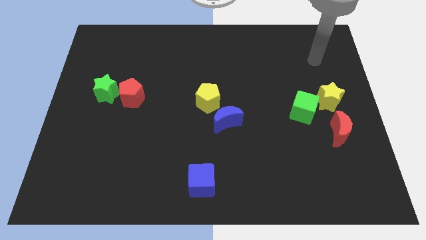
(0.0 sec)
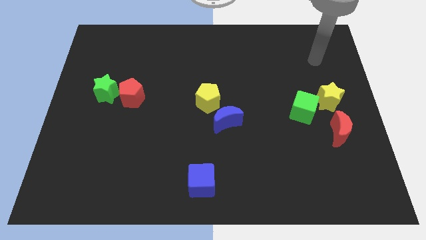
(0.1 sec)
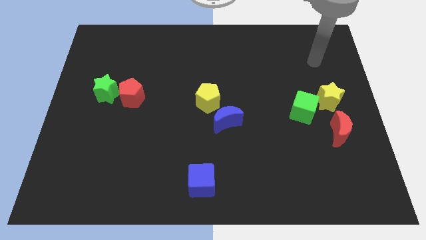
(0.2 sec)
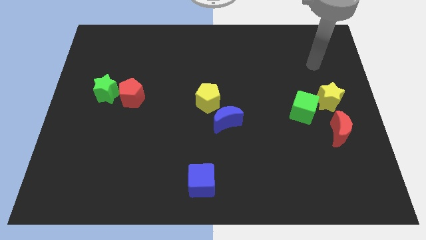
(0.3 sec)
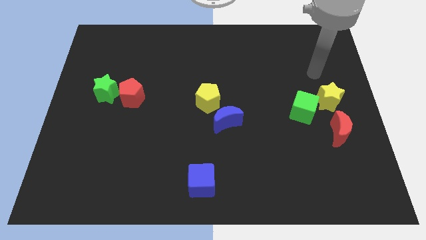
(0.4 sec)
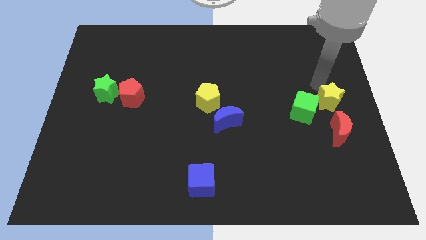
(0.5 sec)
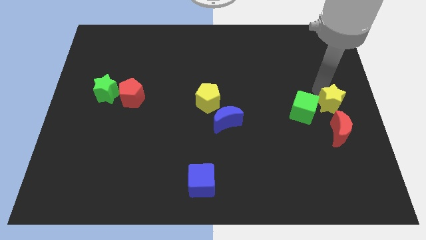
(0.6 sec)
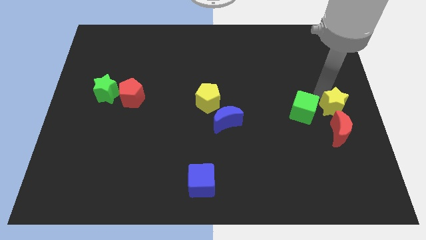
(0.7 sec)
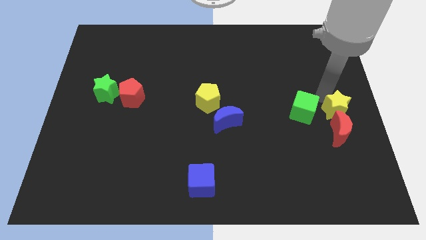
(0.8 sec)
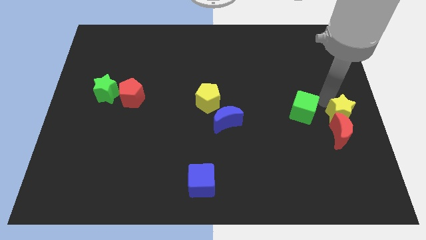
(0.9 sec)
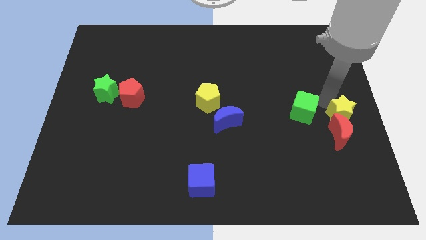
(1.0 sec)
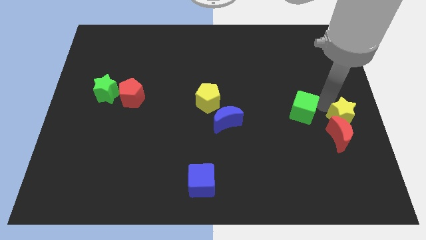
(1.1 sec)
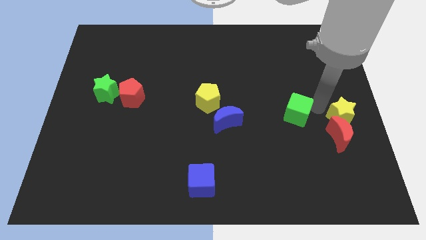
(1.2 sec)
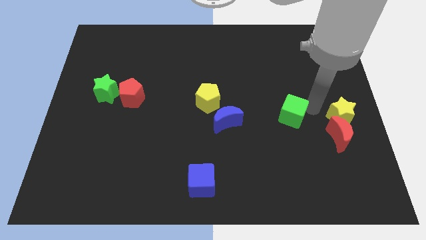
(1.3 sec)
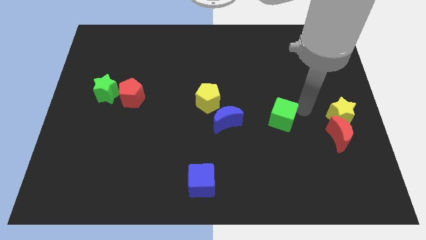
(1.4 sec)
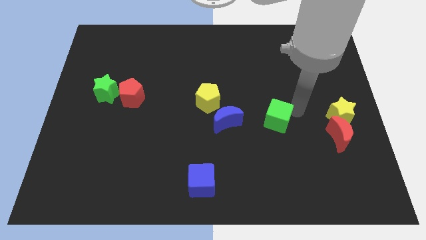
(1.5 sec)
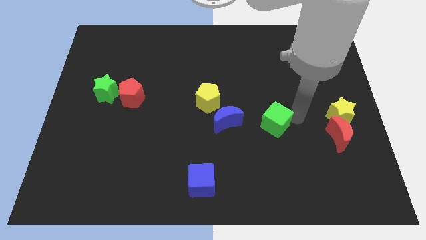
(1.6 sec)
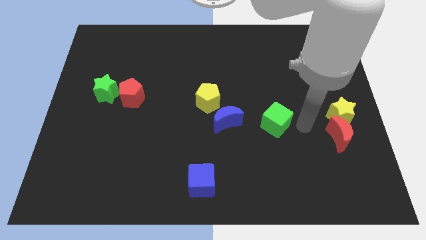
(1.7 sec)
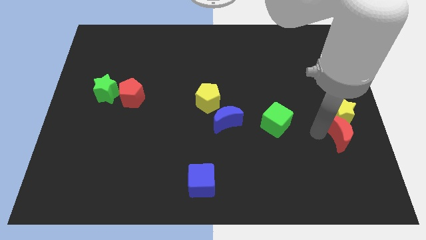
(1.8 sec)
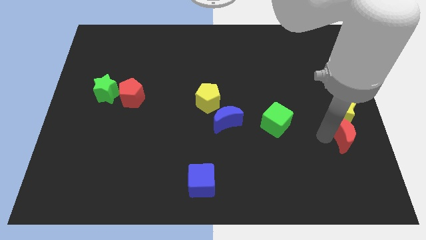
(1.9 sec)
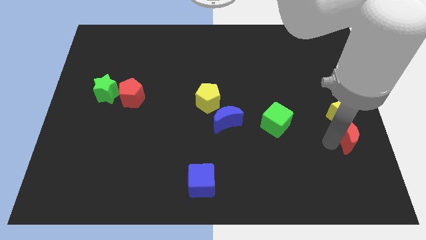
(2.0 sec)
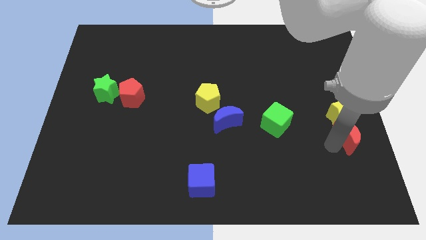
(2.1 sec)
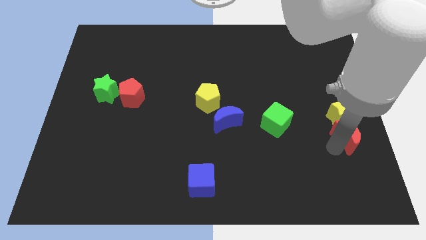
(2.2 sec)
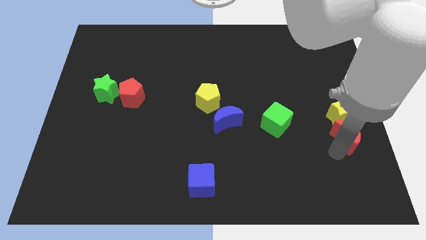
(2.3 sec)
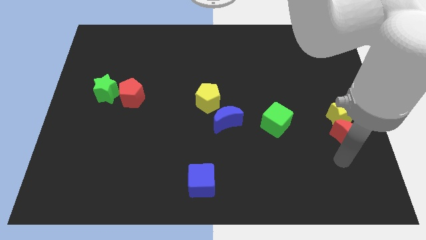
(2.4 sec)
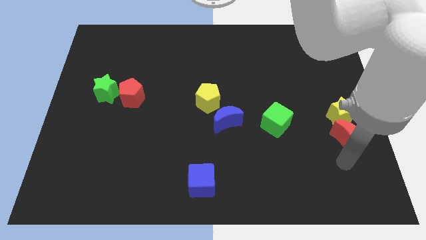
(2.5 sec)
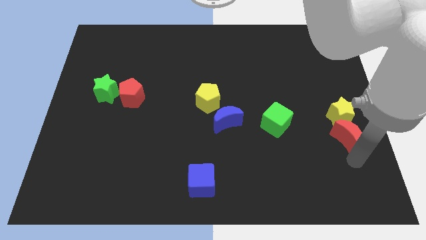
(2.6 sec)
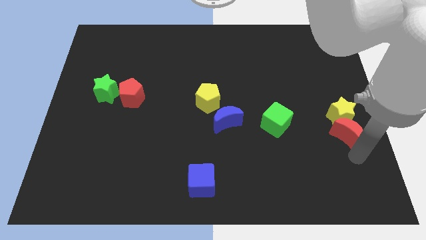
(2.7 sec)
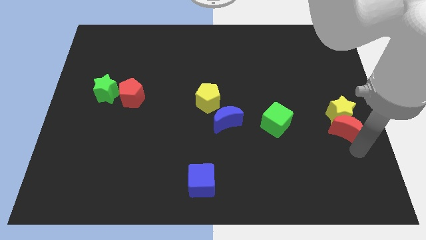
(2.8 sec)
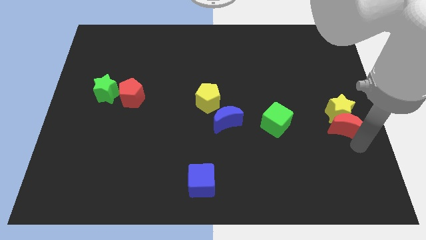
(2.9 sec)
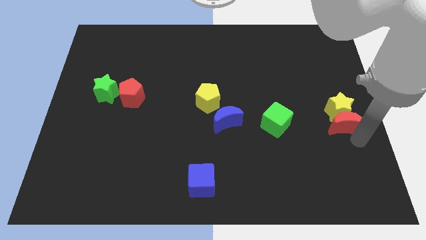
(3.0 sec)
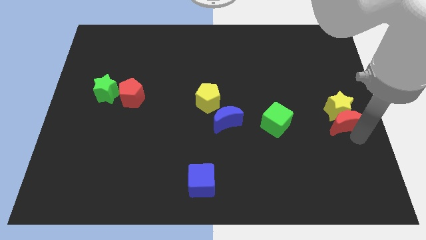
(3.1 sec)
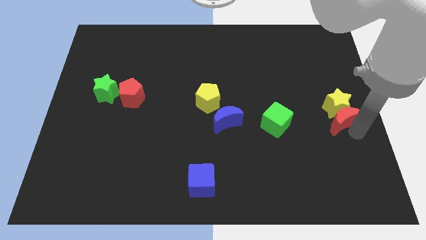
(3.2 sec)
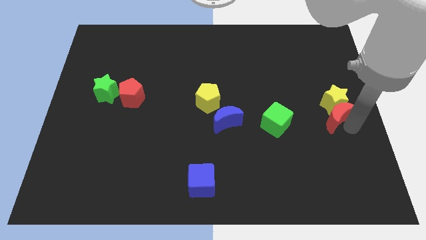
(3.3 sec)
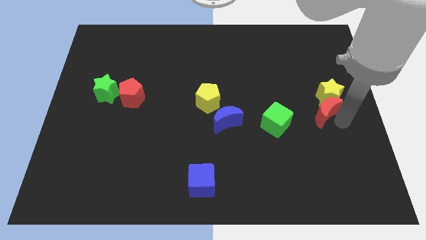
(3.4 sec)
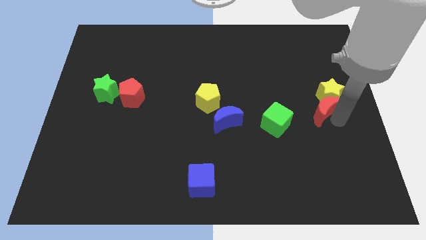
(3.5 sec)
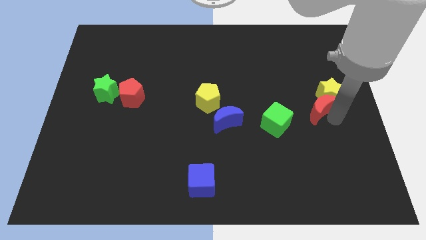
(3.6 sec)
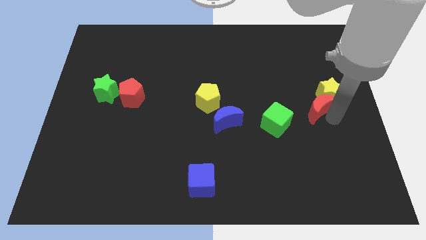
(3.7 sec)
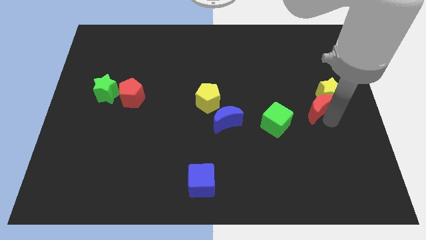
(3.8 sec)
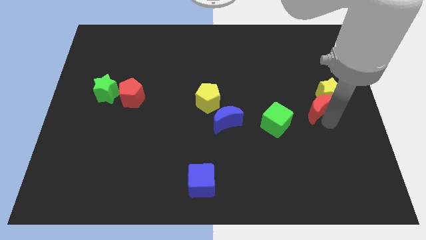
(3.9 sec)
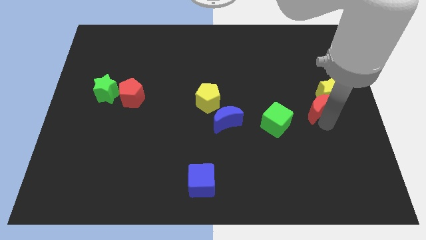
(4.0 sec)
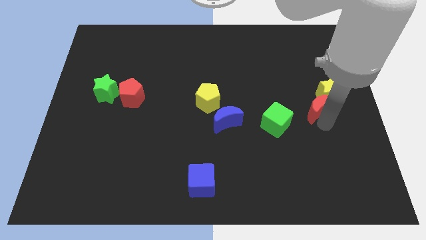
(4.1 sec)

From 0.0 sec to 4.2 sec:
push the red crescent into the yellow star

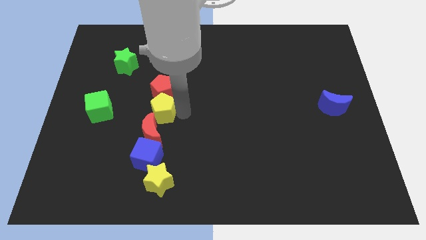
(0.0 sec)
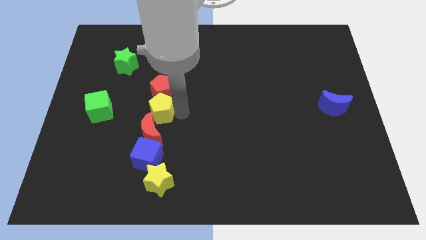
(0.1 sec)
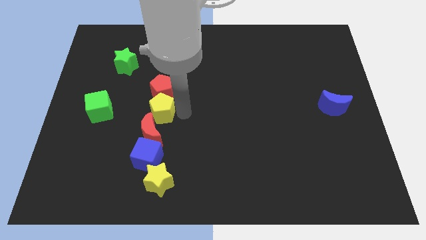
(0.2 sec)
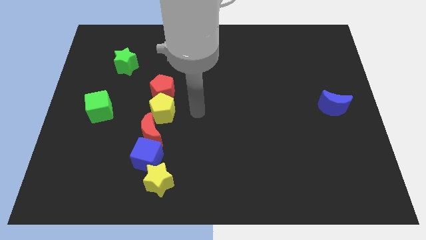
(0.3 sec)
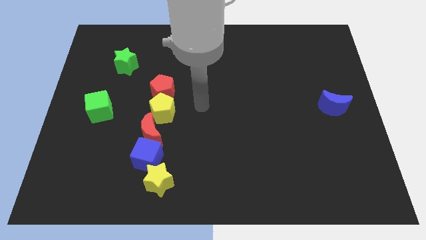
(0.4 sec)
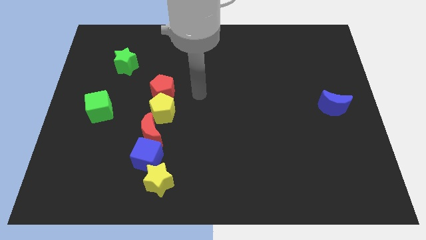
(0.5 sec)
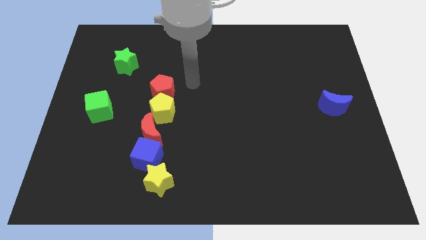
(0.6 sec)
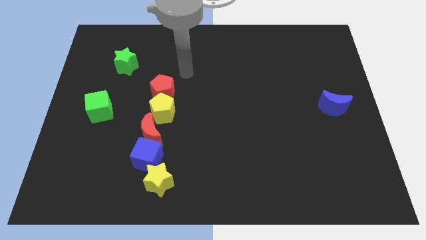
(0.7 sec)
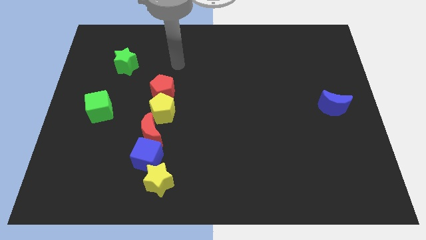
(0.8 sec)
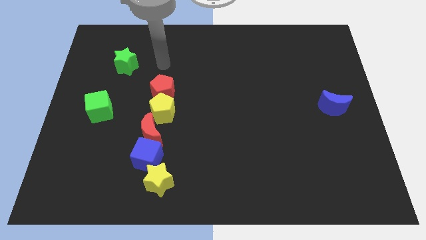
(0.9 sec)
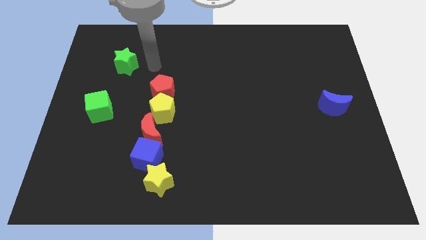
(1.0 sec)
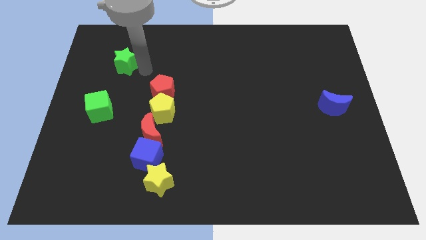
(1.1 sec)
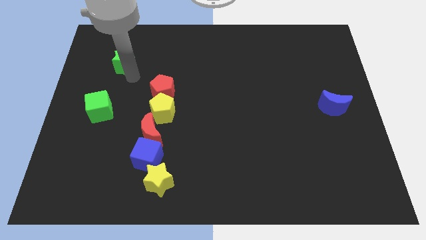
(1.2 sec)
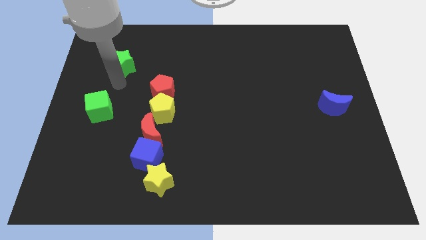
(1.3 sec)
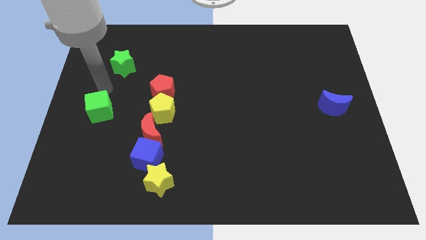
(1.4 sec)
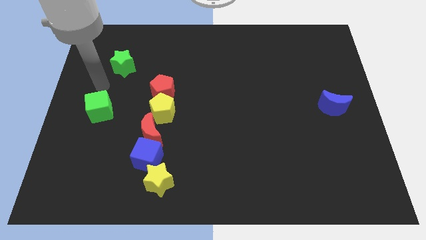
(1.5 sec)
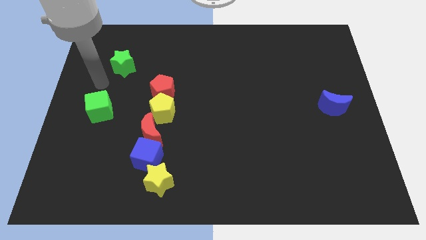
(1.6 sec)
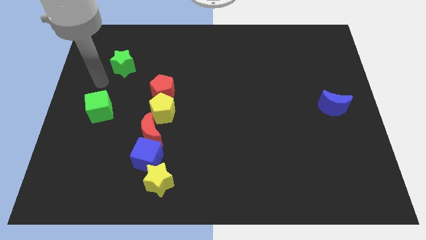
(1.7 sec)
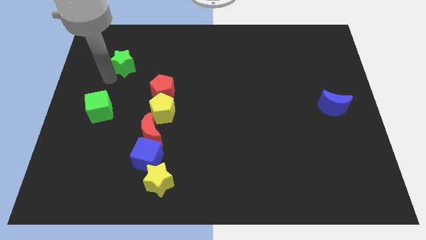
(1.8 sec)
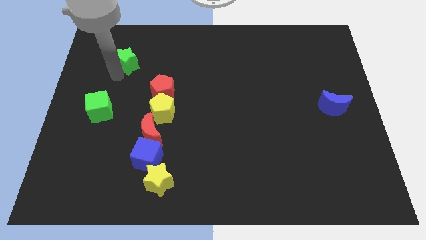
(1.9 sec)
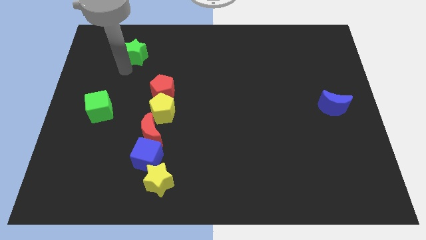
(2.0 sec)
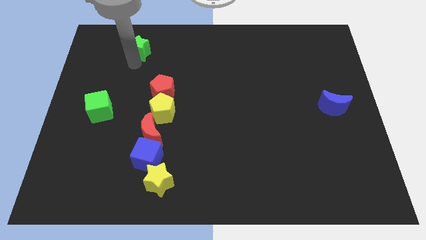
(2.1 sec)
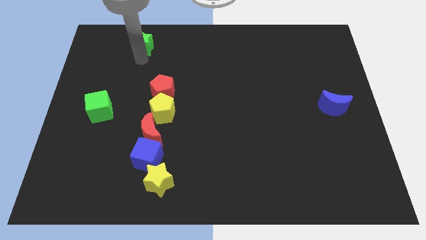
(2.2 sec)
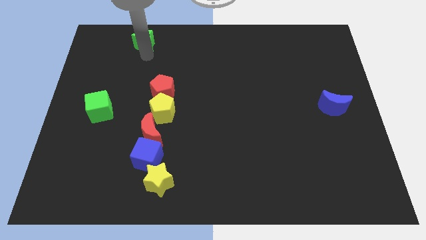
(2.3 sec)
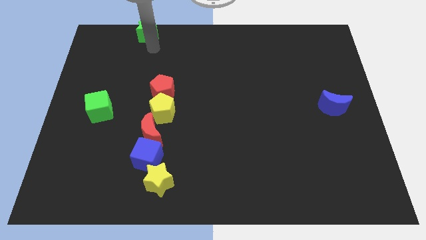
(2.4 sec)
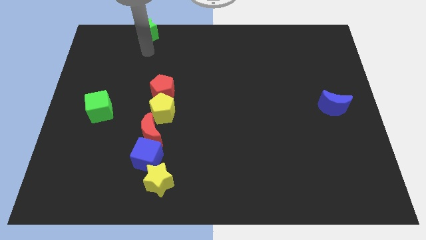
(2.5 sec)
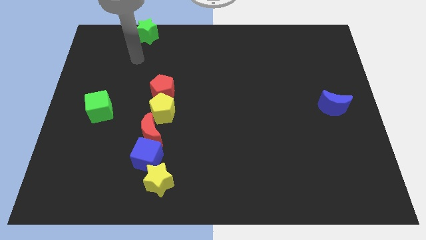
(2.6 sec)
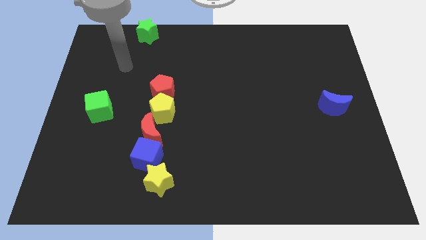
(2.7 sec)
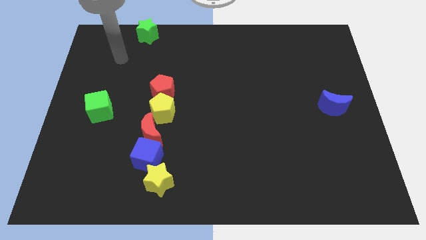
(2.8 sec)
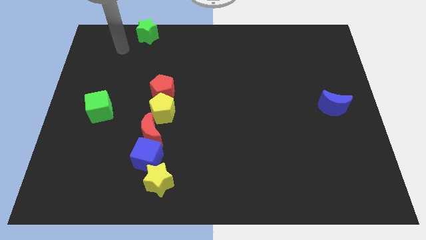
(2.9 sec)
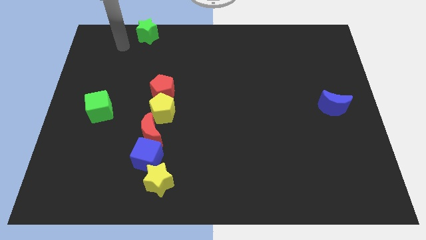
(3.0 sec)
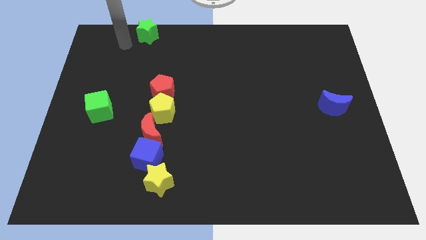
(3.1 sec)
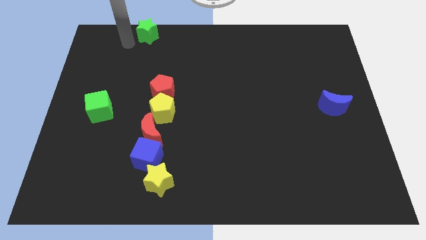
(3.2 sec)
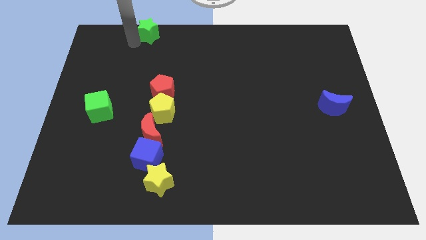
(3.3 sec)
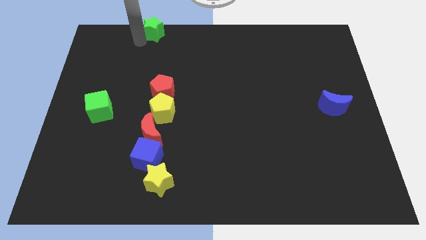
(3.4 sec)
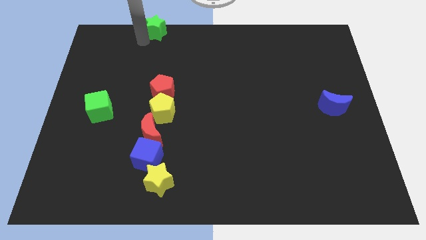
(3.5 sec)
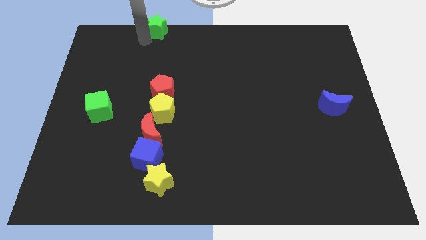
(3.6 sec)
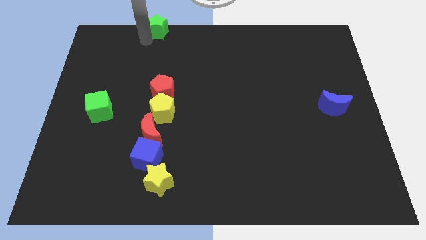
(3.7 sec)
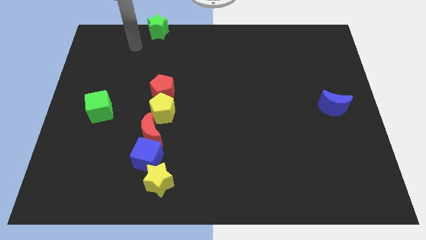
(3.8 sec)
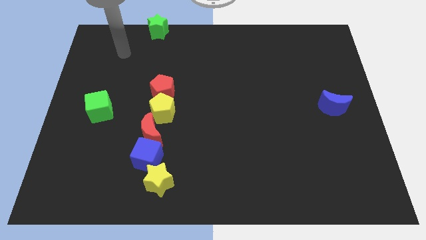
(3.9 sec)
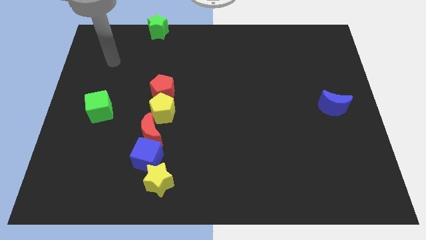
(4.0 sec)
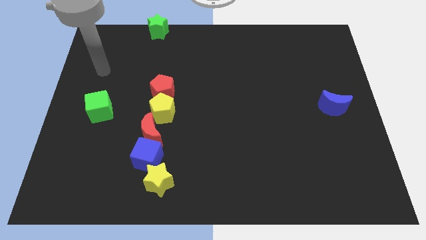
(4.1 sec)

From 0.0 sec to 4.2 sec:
move green star to the top left

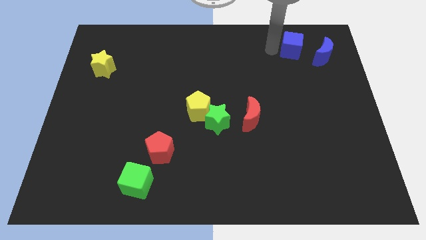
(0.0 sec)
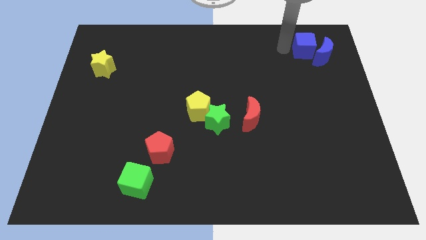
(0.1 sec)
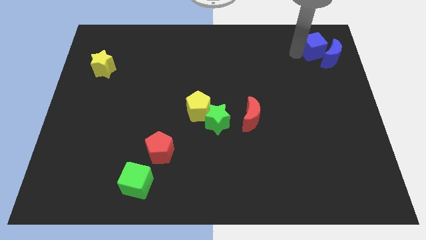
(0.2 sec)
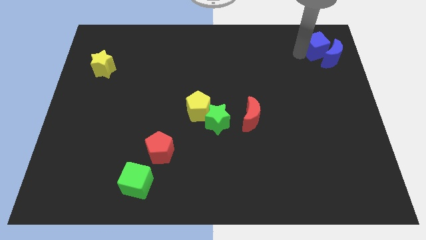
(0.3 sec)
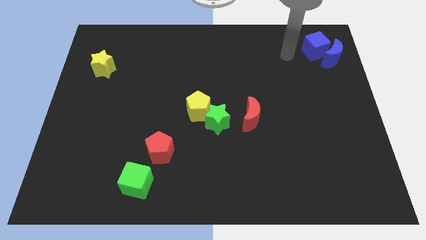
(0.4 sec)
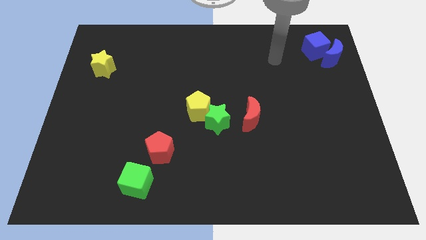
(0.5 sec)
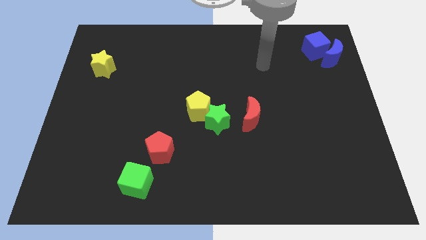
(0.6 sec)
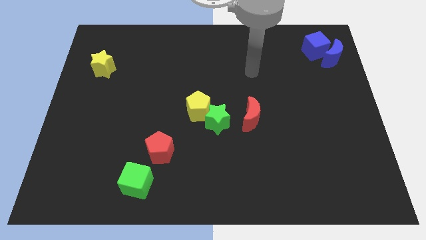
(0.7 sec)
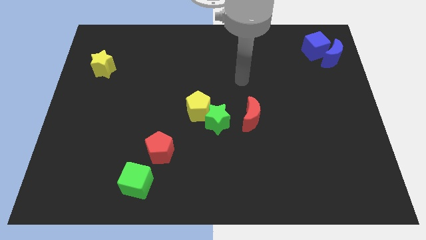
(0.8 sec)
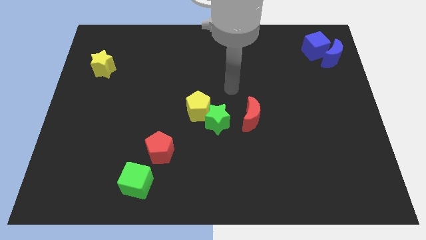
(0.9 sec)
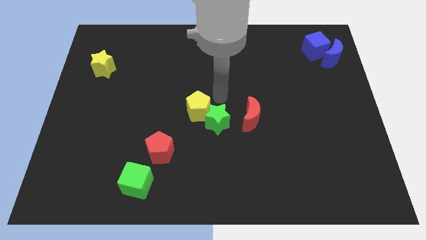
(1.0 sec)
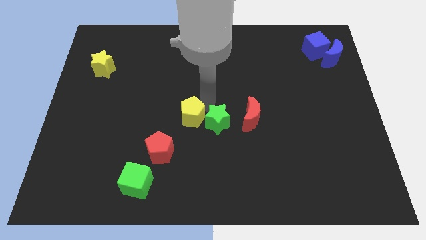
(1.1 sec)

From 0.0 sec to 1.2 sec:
put the blue cube into the blue moon
